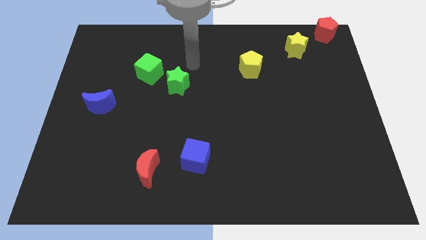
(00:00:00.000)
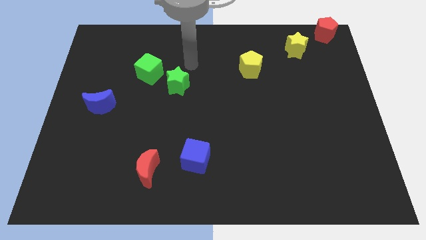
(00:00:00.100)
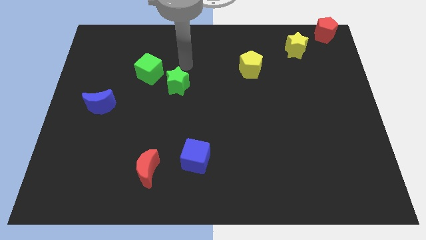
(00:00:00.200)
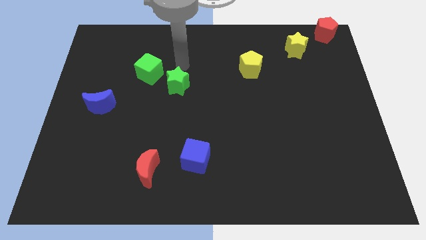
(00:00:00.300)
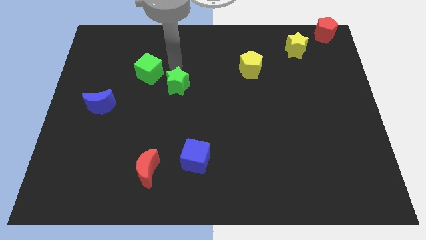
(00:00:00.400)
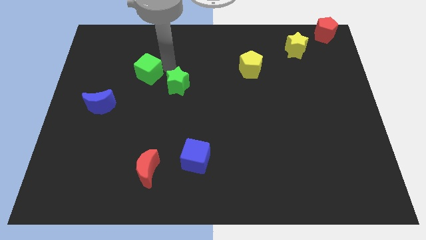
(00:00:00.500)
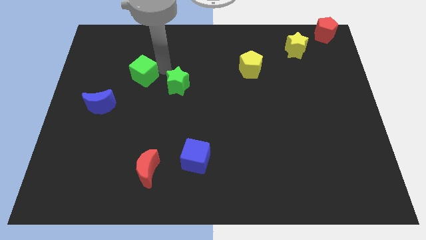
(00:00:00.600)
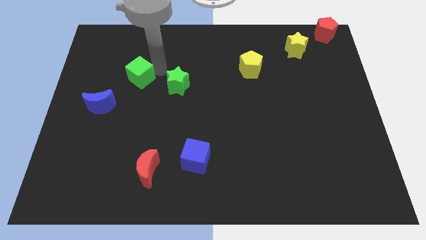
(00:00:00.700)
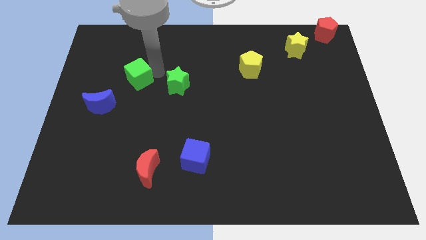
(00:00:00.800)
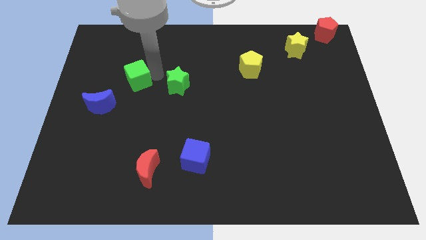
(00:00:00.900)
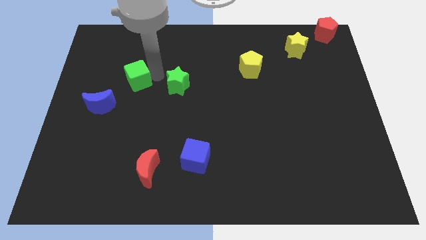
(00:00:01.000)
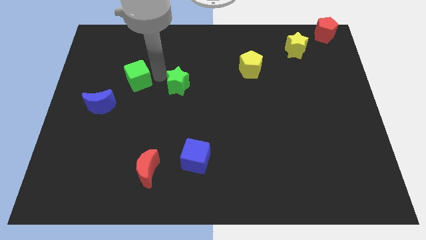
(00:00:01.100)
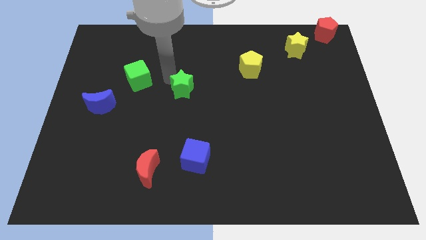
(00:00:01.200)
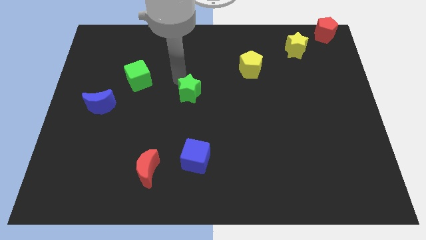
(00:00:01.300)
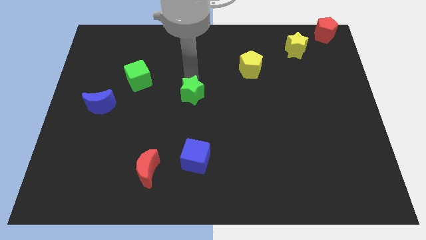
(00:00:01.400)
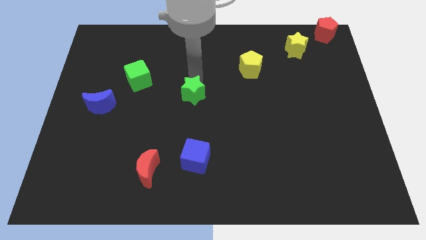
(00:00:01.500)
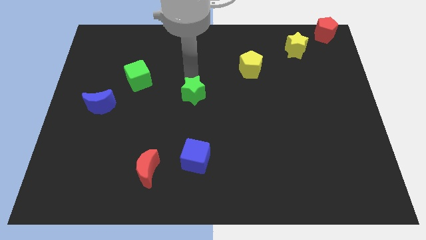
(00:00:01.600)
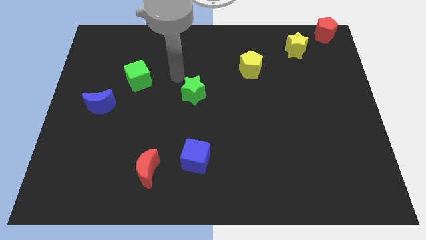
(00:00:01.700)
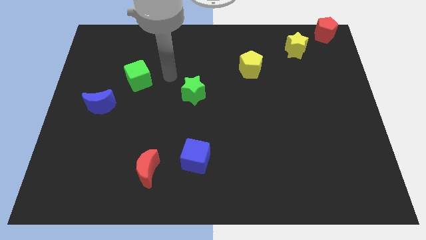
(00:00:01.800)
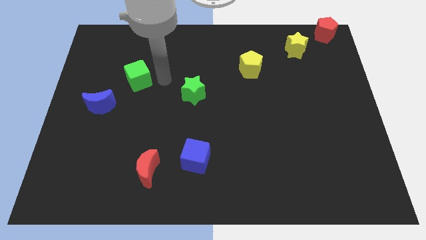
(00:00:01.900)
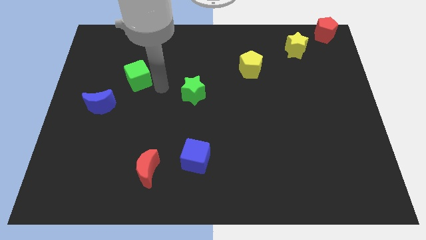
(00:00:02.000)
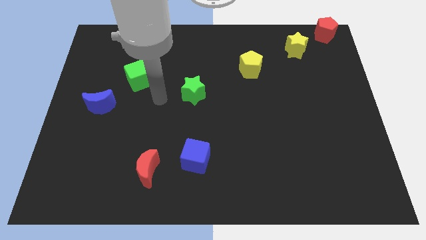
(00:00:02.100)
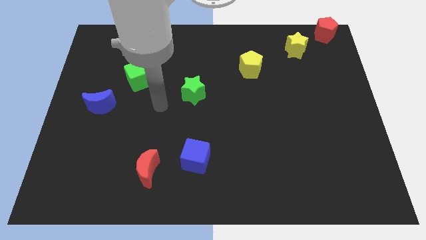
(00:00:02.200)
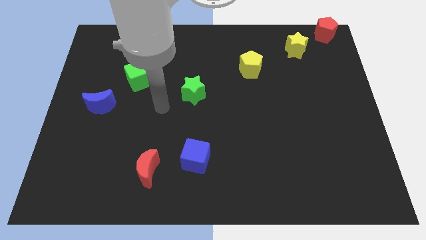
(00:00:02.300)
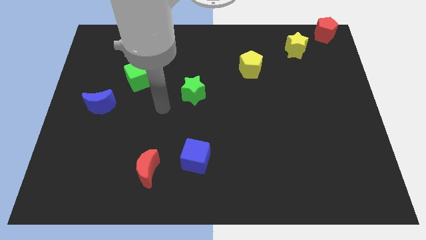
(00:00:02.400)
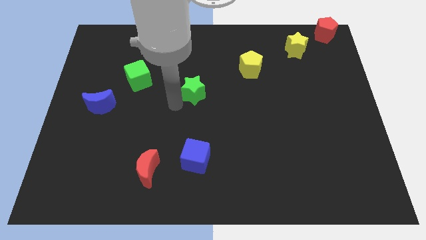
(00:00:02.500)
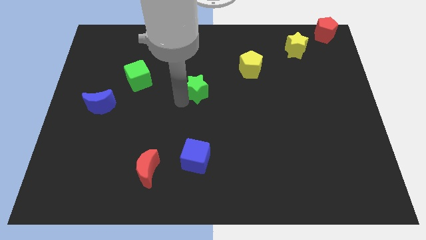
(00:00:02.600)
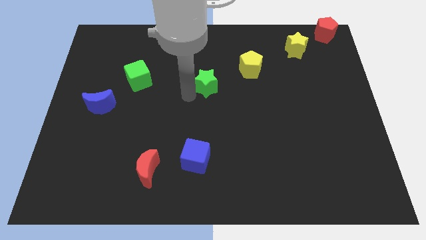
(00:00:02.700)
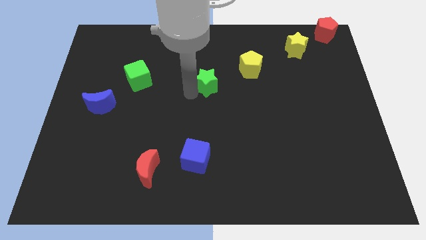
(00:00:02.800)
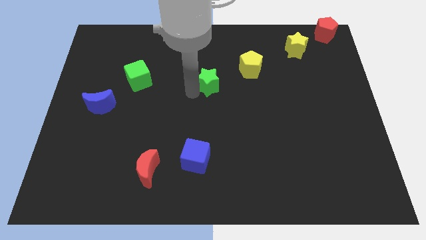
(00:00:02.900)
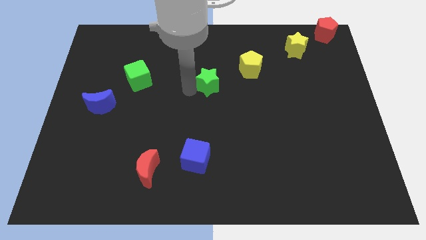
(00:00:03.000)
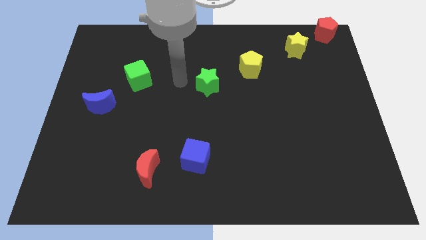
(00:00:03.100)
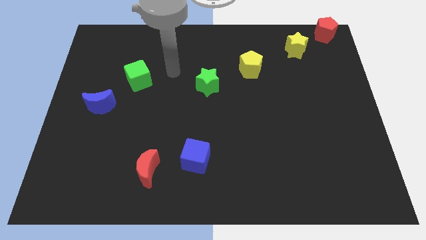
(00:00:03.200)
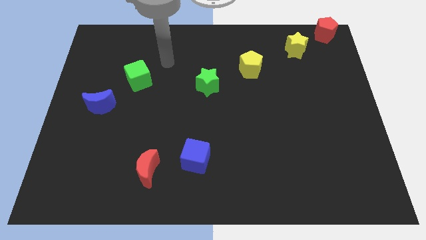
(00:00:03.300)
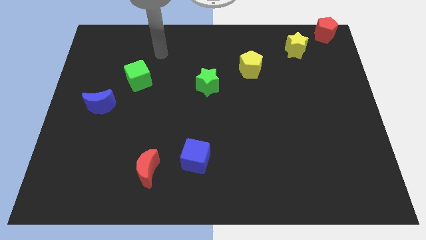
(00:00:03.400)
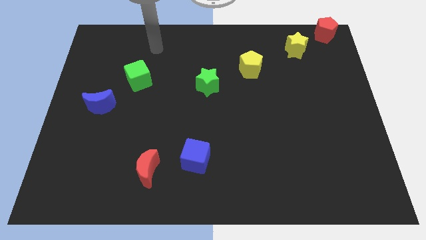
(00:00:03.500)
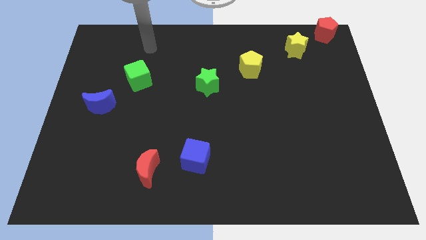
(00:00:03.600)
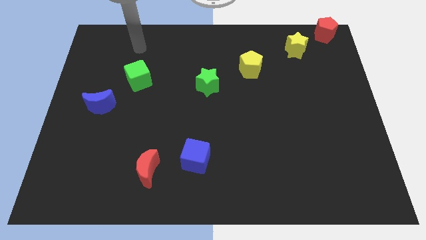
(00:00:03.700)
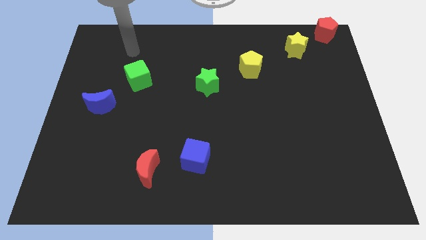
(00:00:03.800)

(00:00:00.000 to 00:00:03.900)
drag the green star diagonally on the top right side of the blue cube

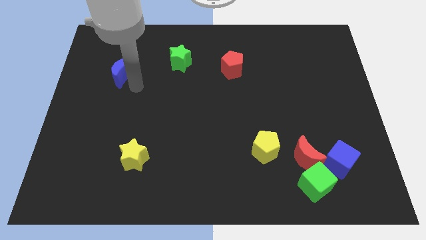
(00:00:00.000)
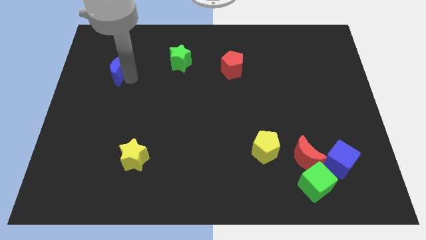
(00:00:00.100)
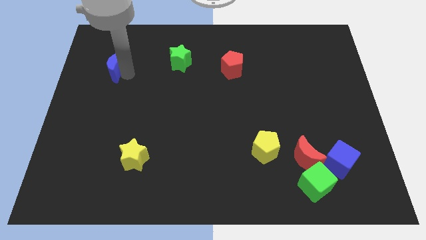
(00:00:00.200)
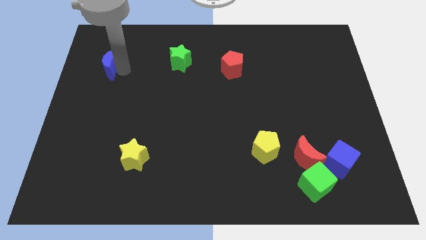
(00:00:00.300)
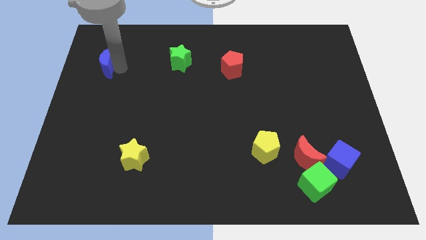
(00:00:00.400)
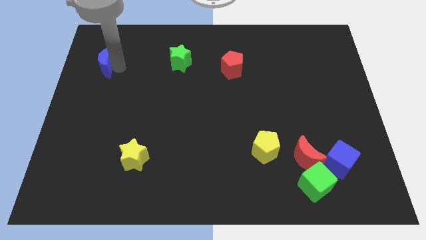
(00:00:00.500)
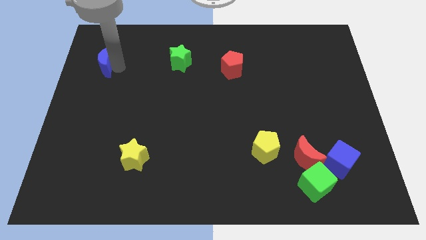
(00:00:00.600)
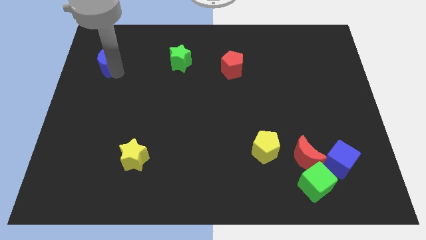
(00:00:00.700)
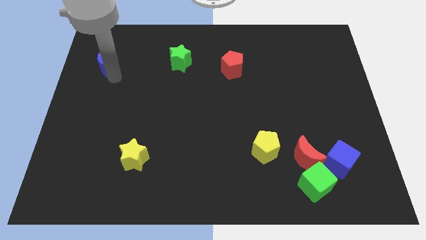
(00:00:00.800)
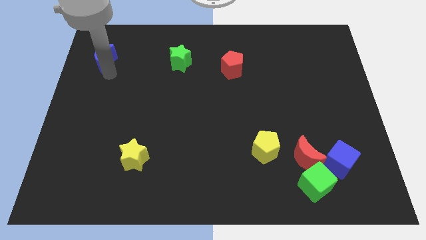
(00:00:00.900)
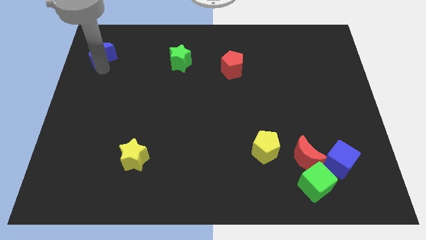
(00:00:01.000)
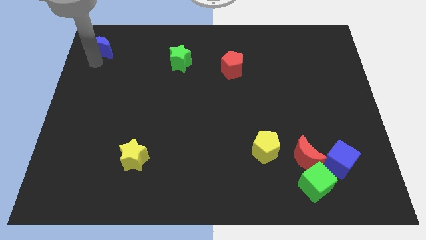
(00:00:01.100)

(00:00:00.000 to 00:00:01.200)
slide the blue crescent to the top

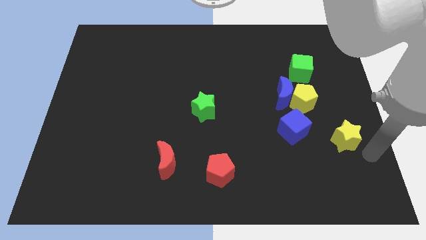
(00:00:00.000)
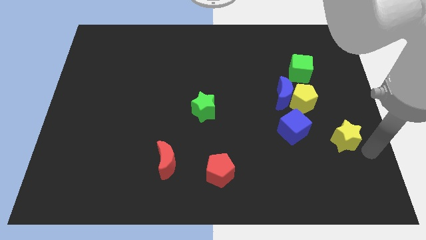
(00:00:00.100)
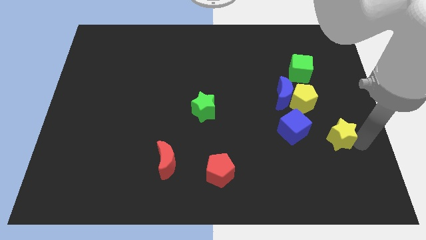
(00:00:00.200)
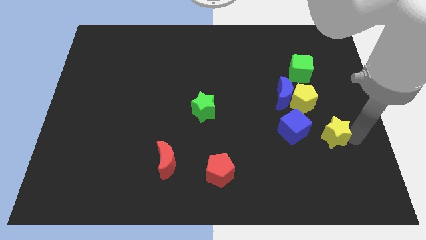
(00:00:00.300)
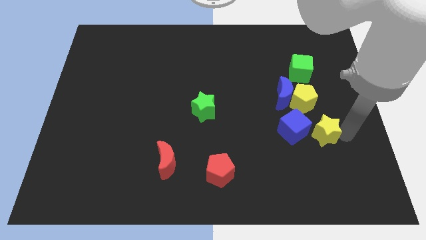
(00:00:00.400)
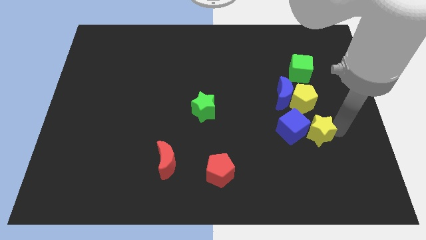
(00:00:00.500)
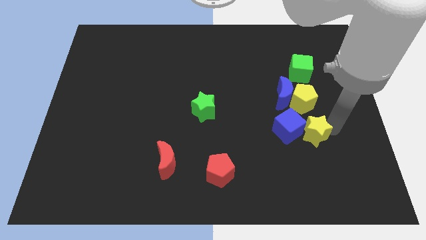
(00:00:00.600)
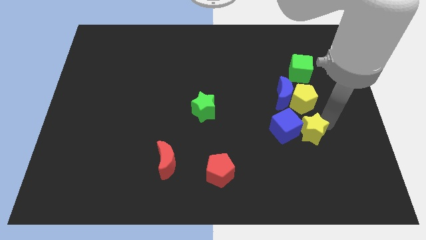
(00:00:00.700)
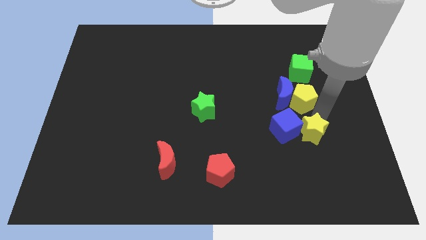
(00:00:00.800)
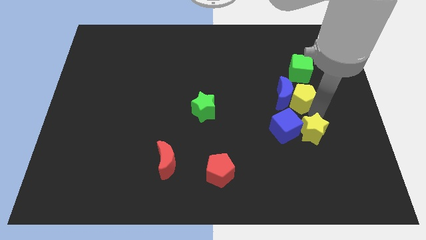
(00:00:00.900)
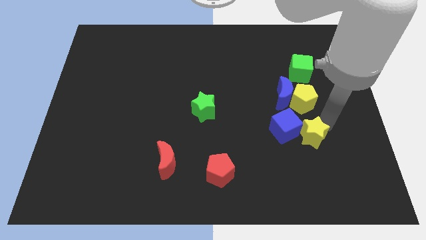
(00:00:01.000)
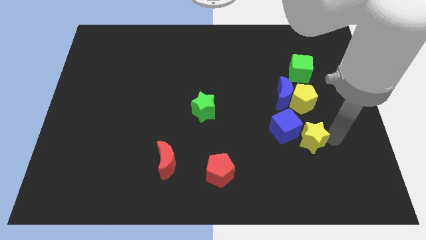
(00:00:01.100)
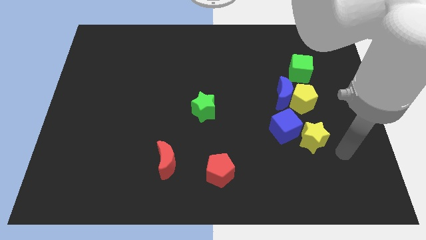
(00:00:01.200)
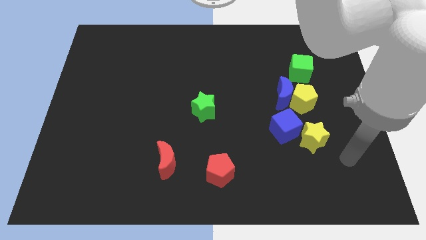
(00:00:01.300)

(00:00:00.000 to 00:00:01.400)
push the yellow star towards the blue cube

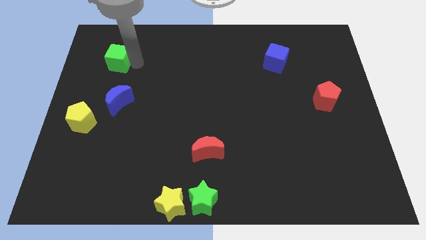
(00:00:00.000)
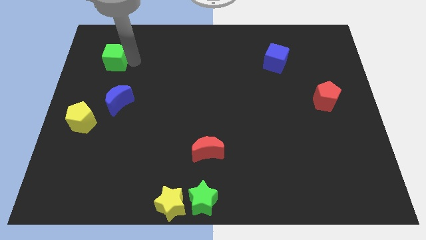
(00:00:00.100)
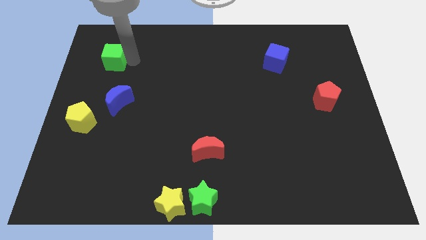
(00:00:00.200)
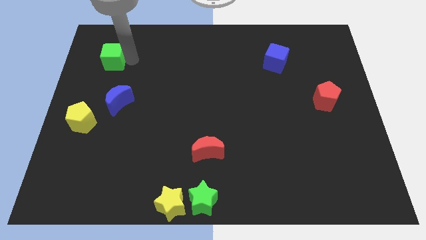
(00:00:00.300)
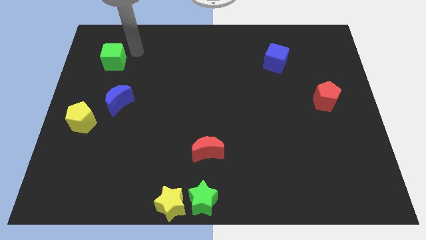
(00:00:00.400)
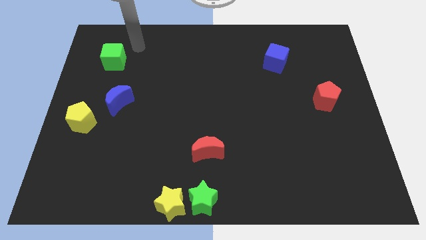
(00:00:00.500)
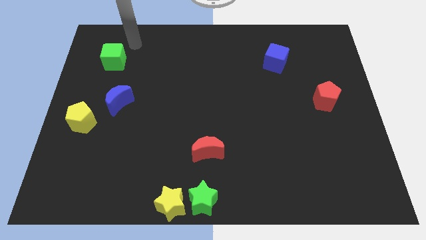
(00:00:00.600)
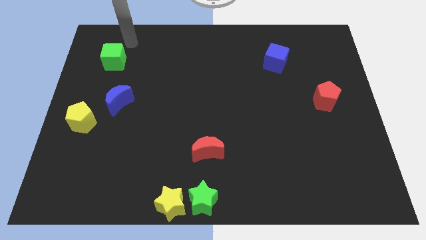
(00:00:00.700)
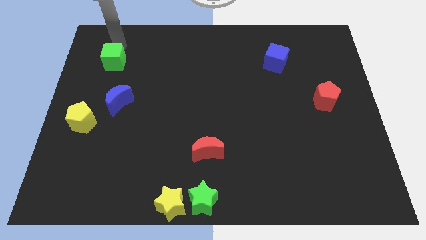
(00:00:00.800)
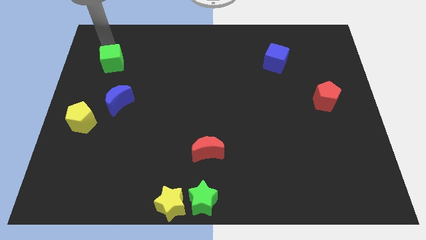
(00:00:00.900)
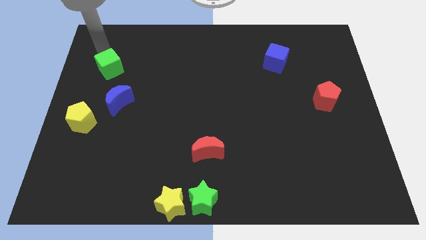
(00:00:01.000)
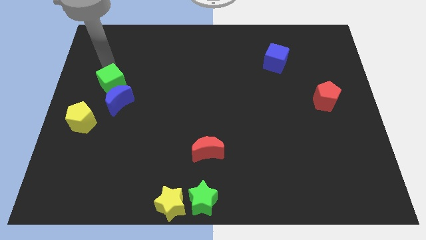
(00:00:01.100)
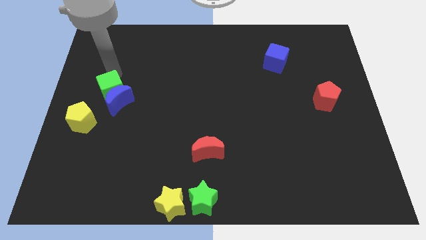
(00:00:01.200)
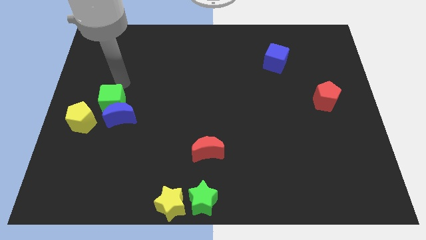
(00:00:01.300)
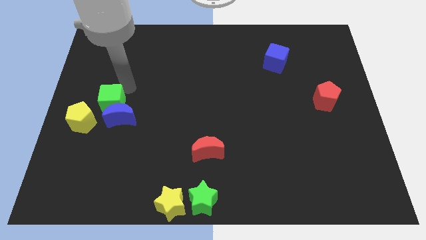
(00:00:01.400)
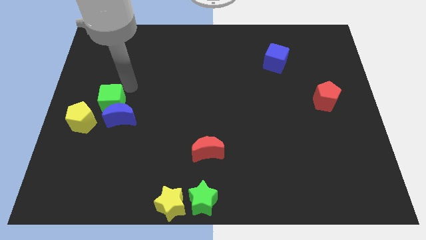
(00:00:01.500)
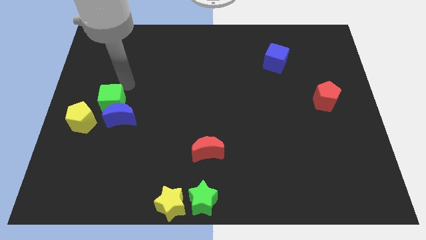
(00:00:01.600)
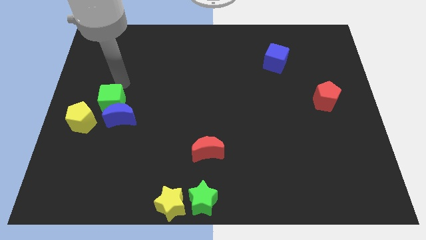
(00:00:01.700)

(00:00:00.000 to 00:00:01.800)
move the green cube into the blue crescent

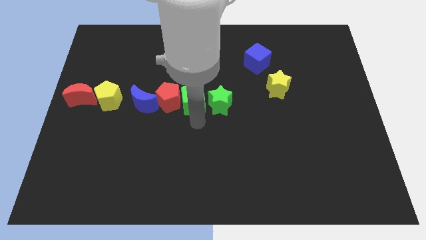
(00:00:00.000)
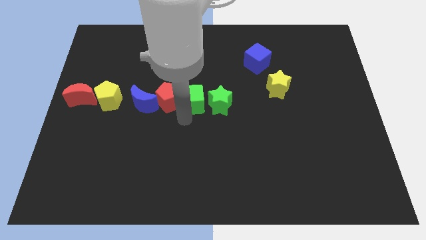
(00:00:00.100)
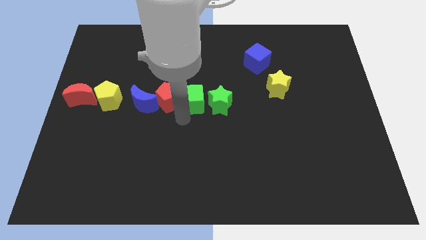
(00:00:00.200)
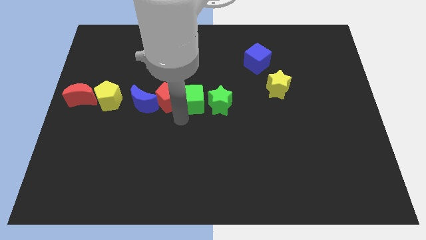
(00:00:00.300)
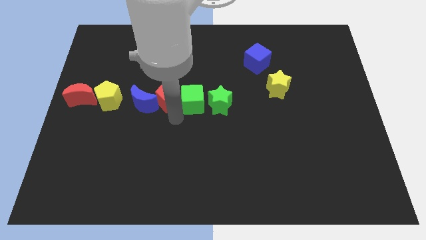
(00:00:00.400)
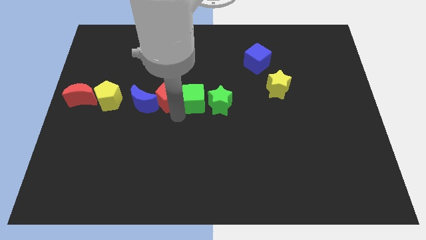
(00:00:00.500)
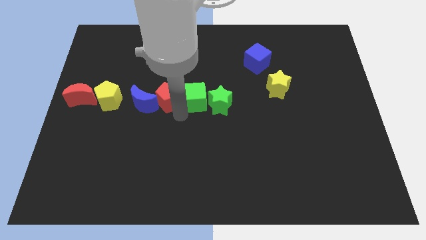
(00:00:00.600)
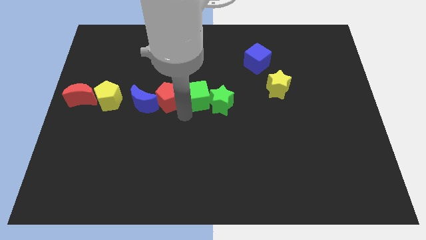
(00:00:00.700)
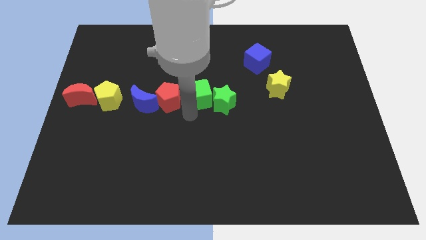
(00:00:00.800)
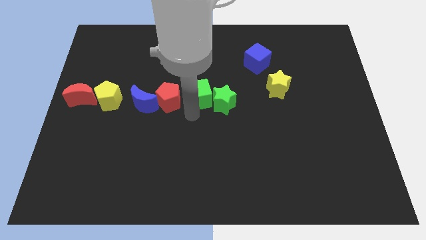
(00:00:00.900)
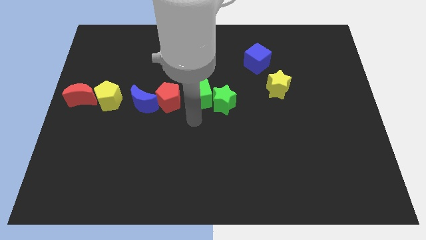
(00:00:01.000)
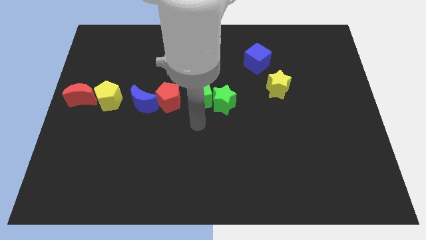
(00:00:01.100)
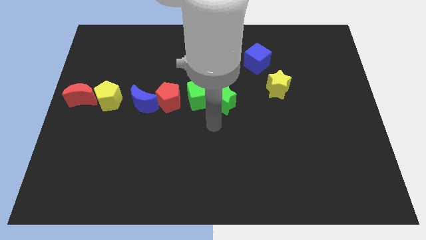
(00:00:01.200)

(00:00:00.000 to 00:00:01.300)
move the green star with the green cube
